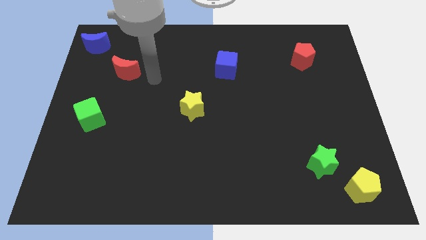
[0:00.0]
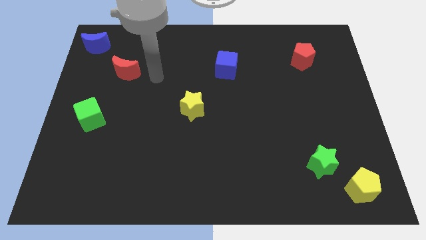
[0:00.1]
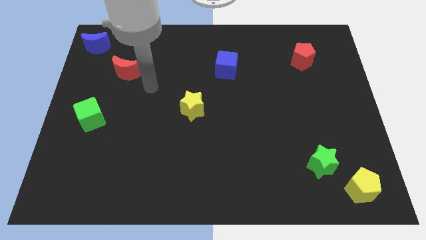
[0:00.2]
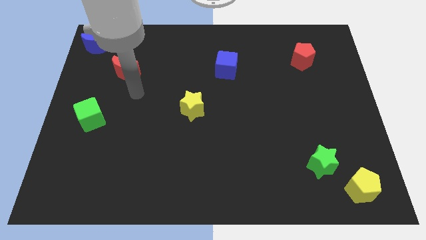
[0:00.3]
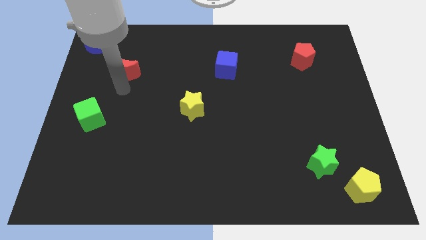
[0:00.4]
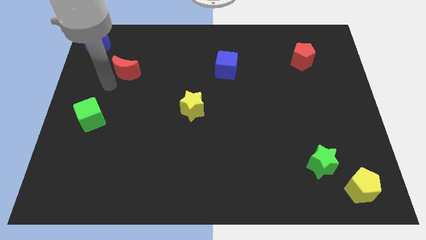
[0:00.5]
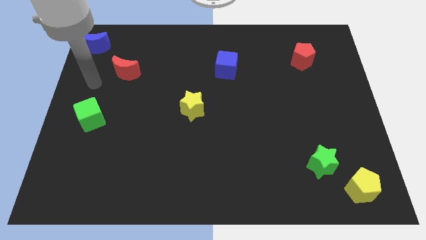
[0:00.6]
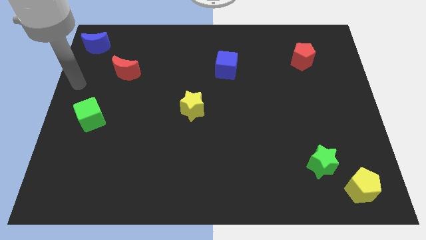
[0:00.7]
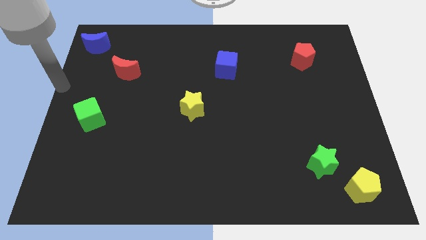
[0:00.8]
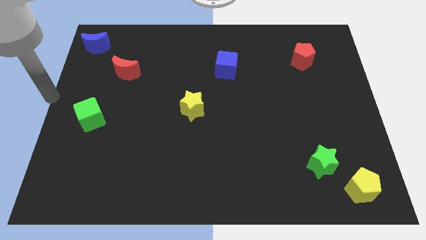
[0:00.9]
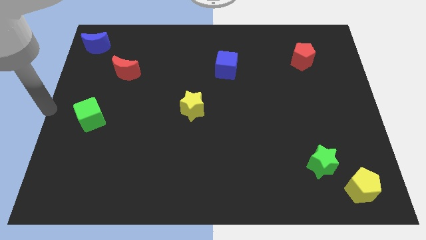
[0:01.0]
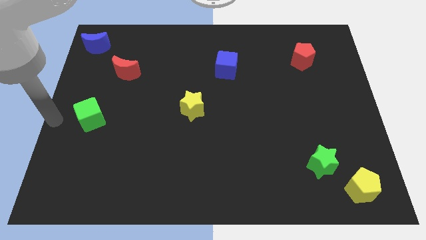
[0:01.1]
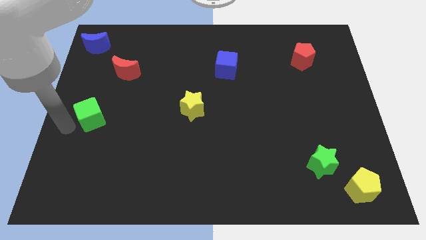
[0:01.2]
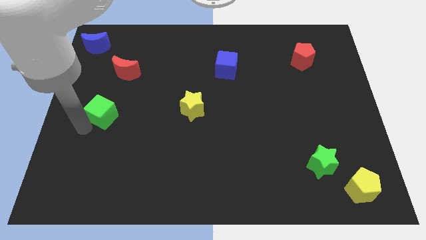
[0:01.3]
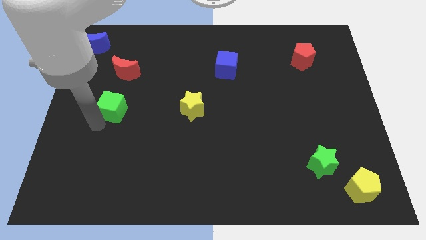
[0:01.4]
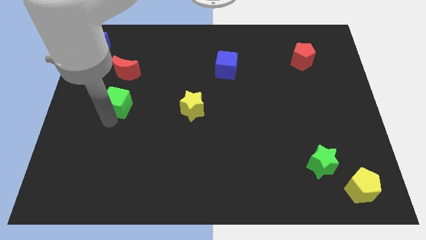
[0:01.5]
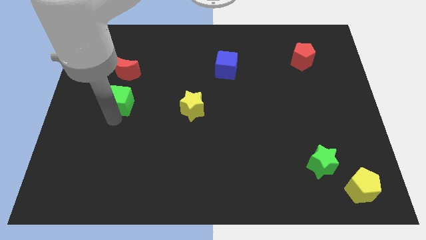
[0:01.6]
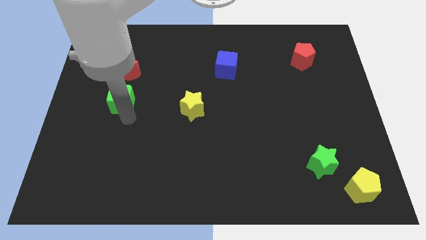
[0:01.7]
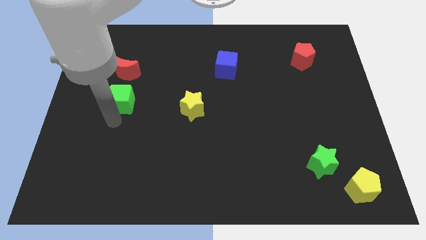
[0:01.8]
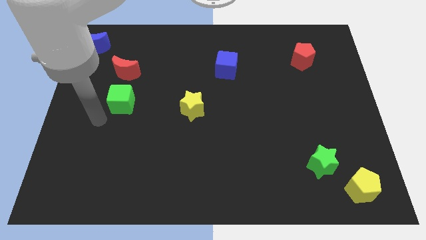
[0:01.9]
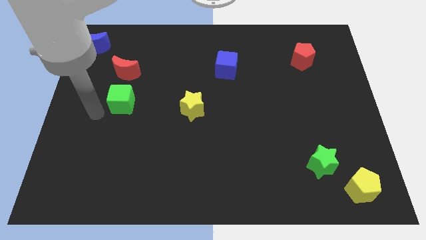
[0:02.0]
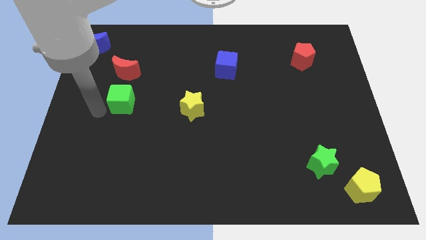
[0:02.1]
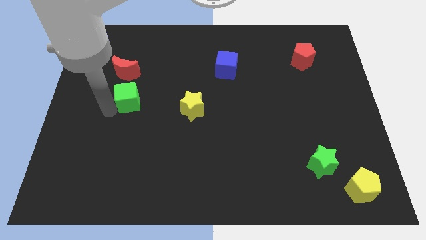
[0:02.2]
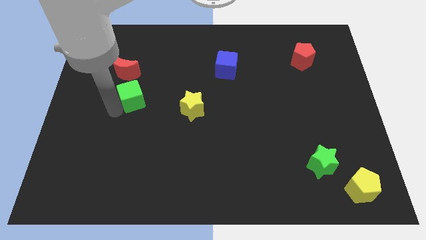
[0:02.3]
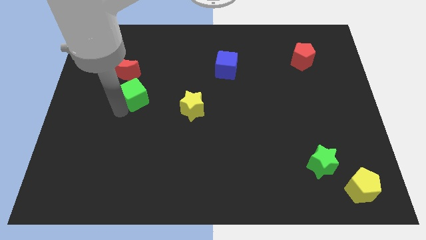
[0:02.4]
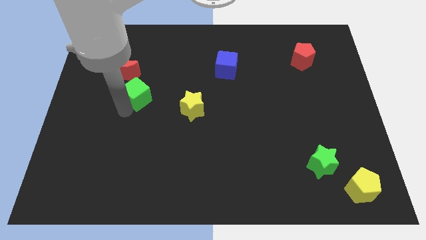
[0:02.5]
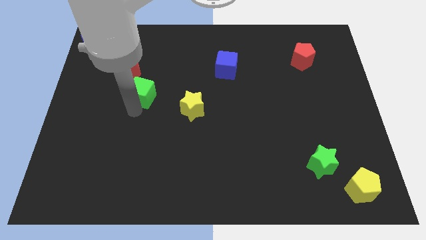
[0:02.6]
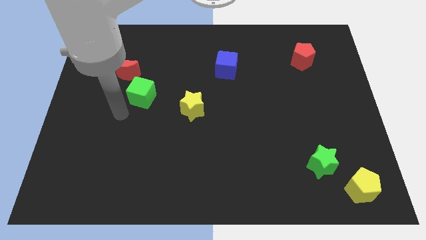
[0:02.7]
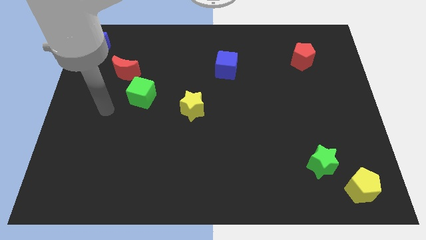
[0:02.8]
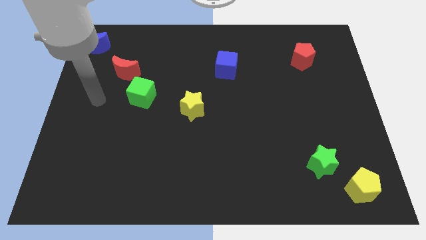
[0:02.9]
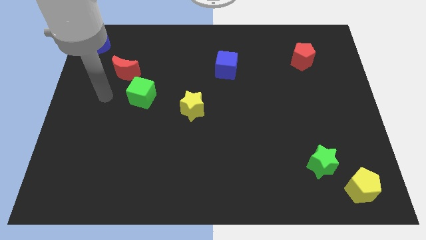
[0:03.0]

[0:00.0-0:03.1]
place green cube to the left of yellow star

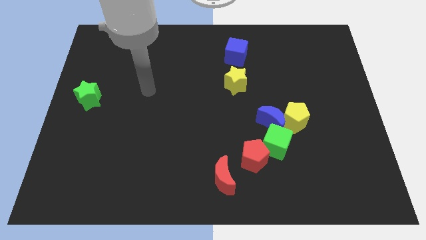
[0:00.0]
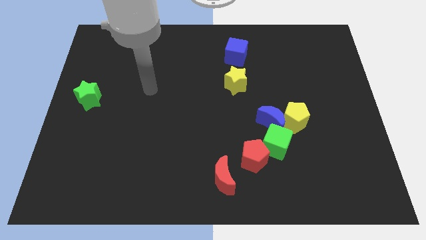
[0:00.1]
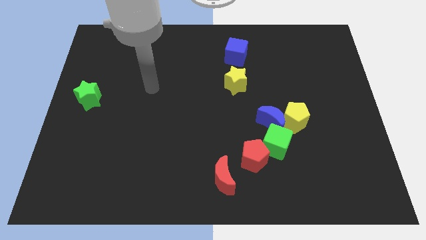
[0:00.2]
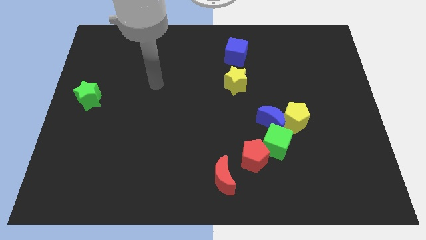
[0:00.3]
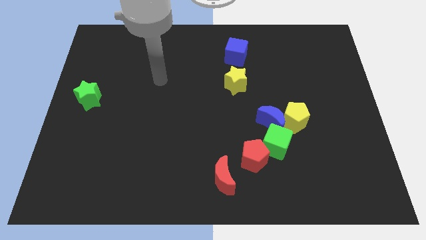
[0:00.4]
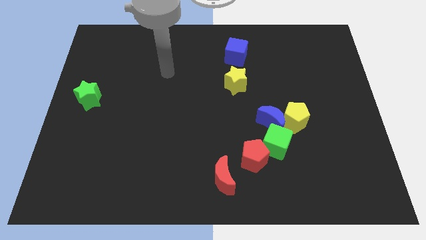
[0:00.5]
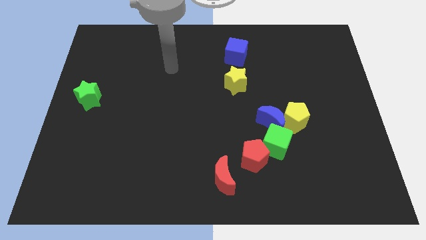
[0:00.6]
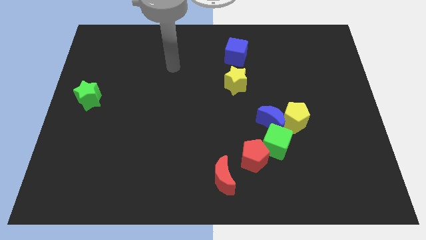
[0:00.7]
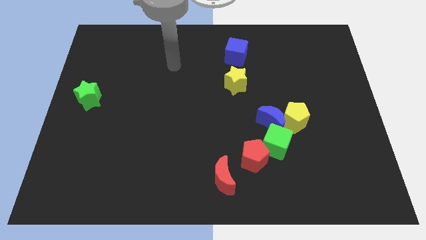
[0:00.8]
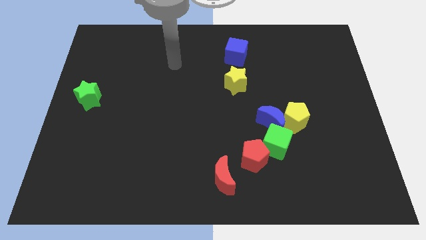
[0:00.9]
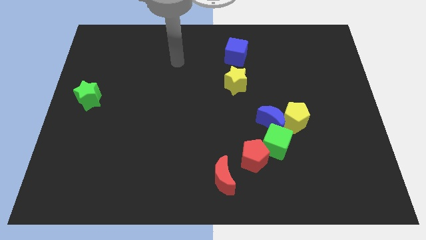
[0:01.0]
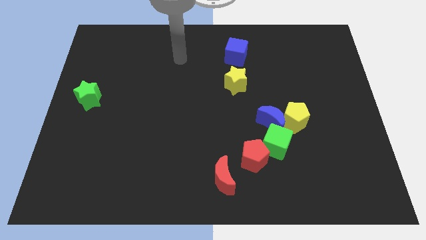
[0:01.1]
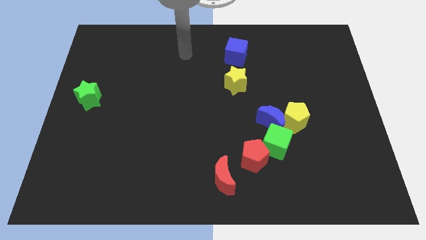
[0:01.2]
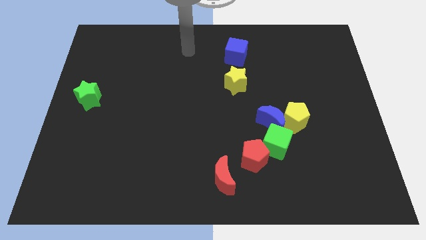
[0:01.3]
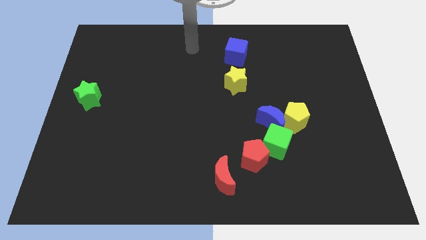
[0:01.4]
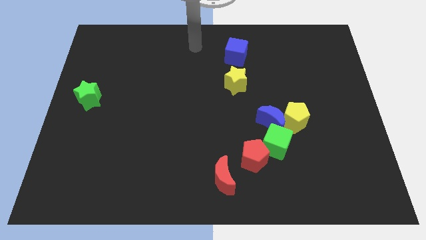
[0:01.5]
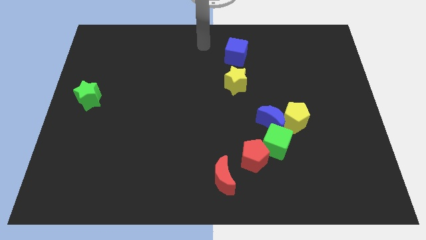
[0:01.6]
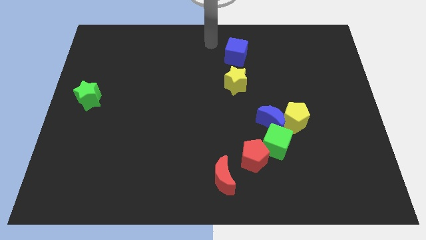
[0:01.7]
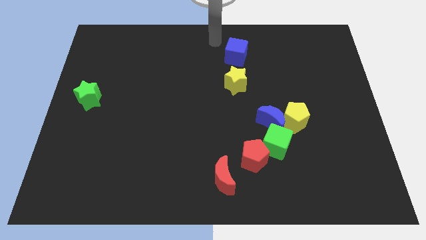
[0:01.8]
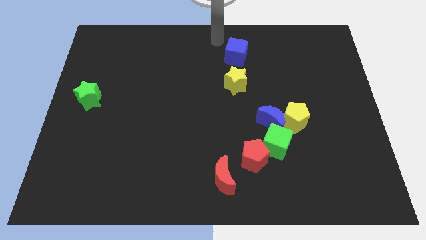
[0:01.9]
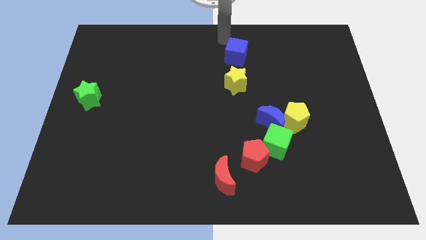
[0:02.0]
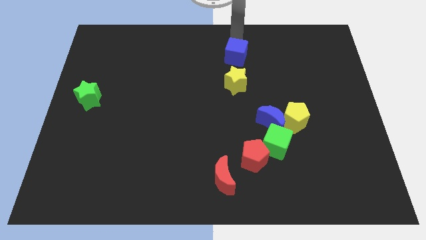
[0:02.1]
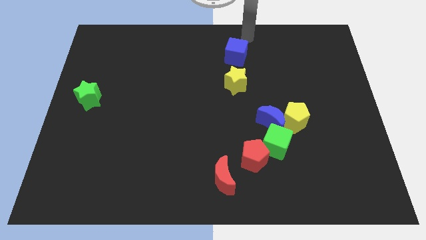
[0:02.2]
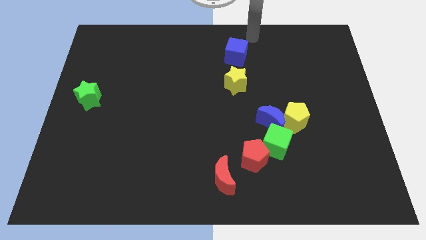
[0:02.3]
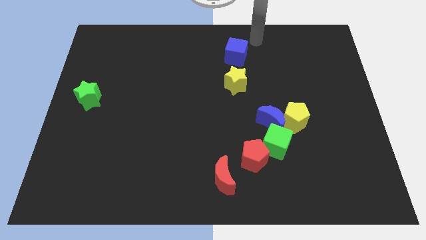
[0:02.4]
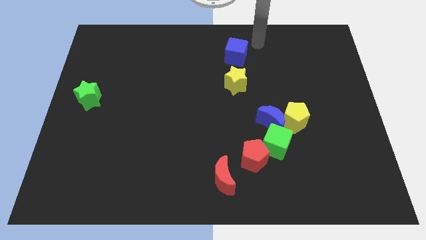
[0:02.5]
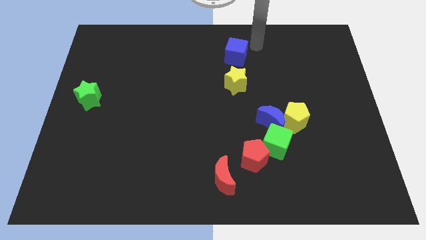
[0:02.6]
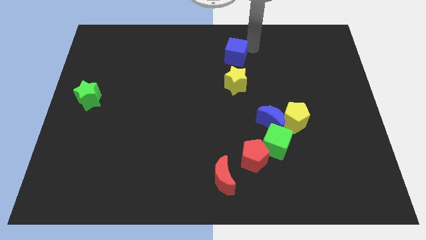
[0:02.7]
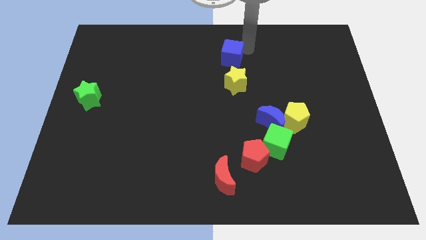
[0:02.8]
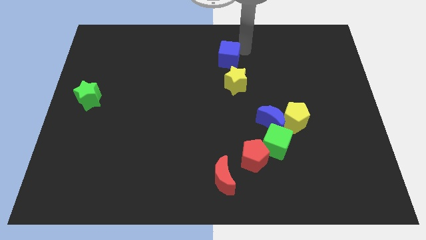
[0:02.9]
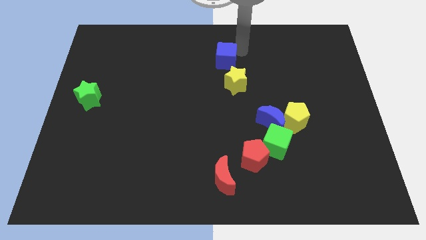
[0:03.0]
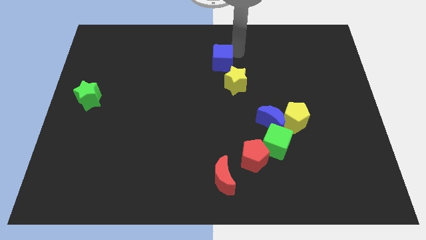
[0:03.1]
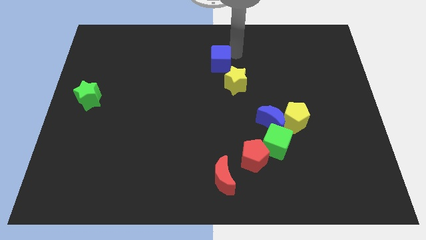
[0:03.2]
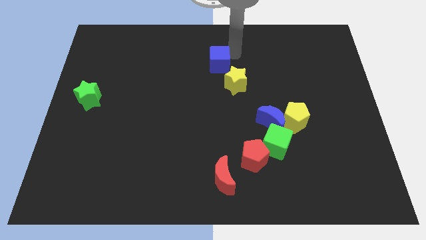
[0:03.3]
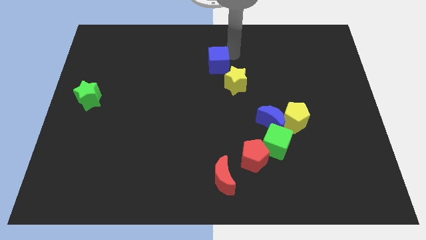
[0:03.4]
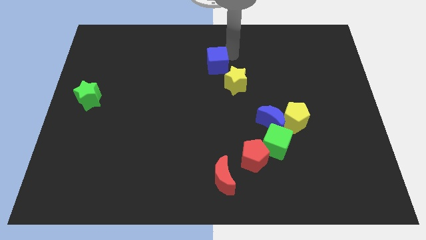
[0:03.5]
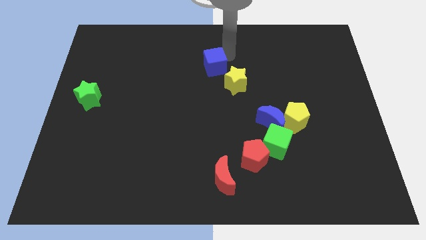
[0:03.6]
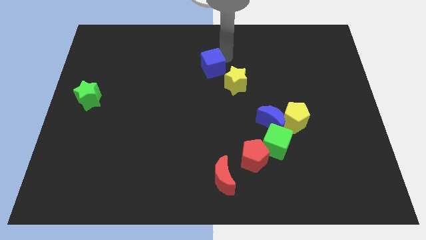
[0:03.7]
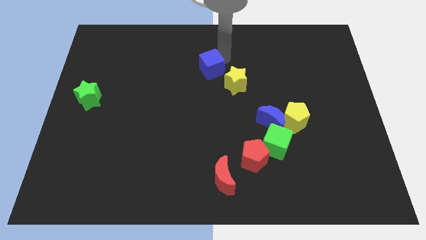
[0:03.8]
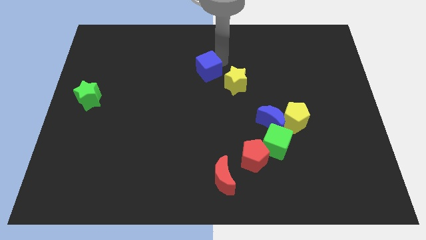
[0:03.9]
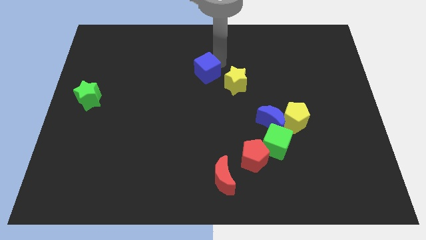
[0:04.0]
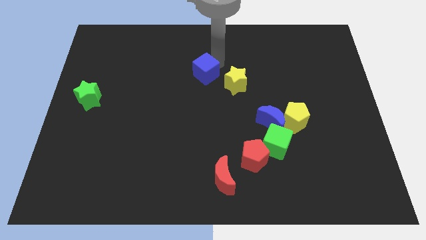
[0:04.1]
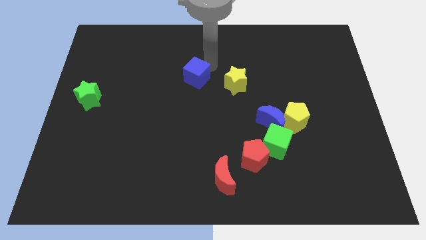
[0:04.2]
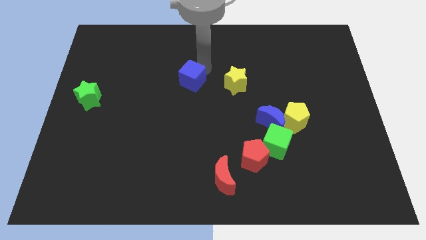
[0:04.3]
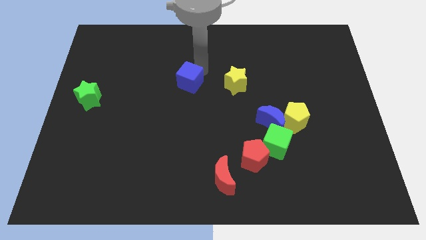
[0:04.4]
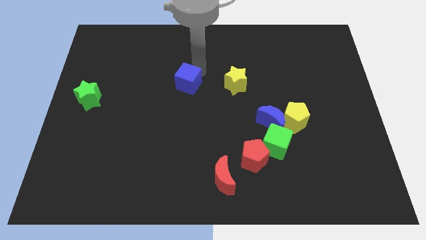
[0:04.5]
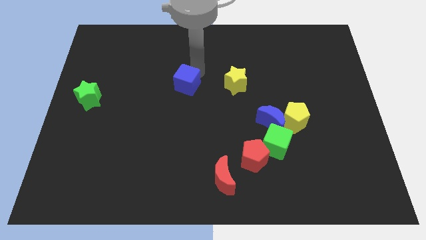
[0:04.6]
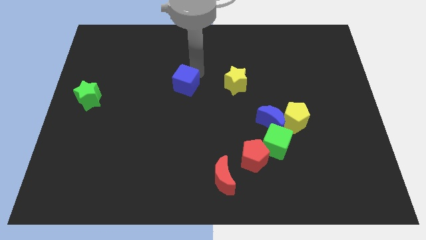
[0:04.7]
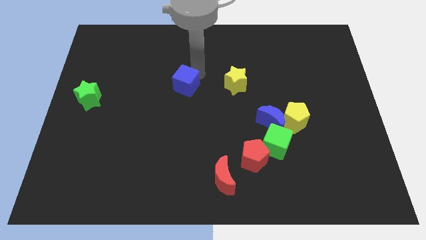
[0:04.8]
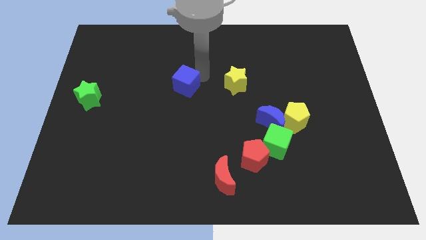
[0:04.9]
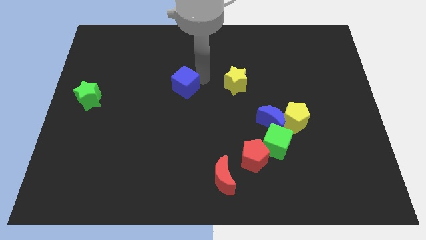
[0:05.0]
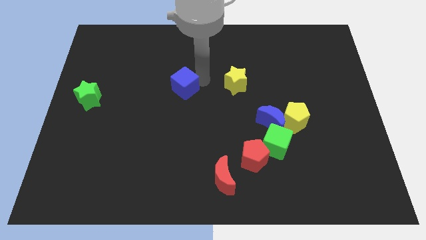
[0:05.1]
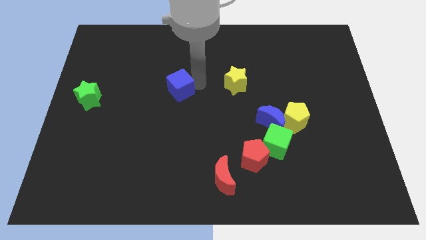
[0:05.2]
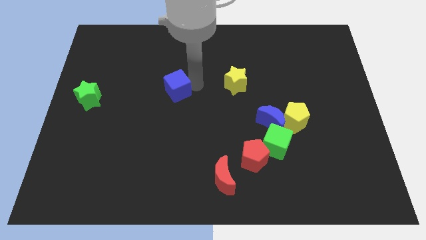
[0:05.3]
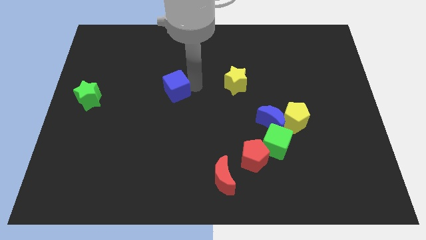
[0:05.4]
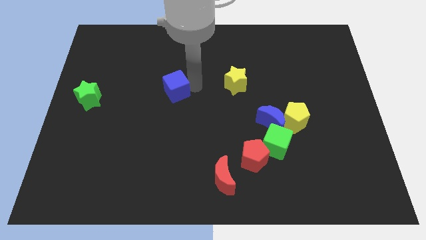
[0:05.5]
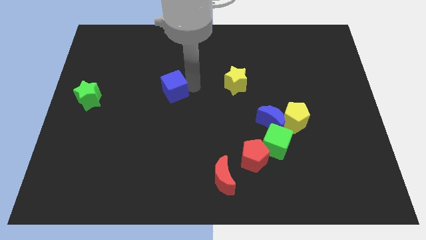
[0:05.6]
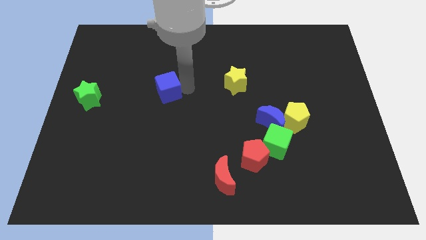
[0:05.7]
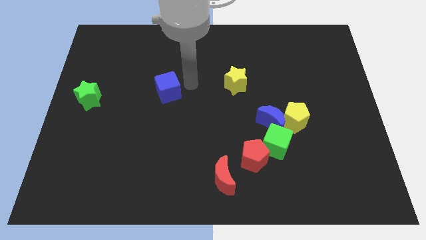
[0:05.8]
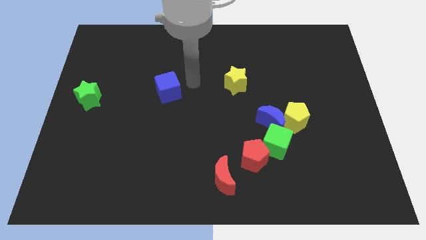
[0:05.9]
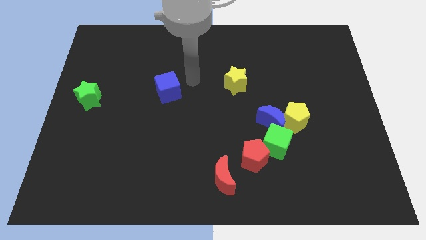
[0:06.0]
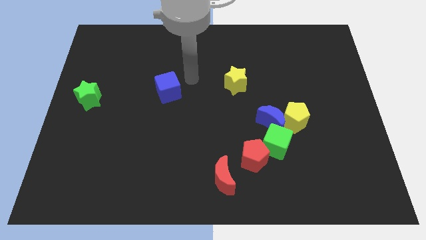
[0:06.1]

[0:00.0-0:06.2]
place the blue cube in between the stars
